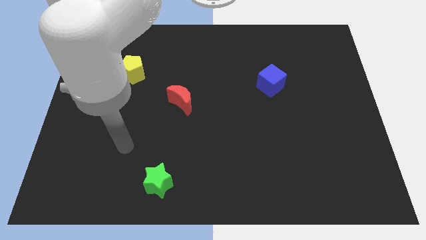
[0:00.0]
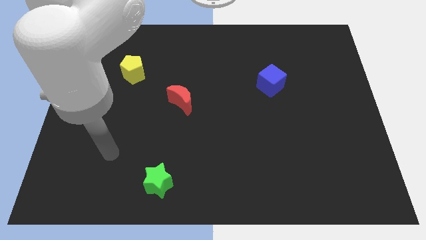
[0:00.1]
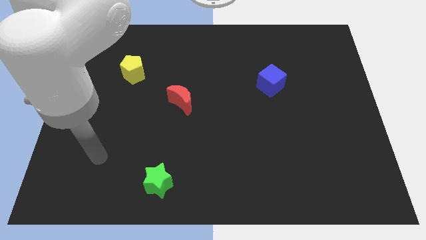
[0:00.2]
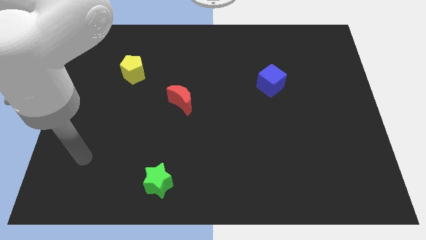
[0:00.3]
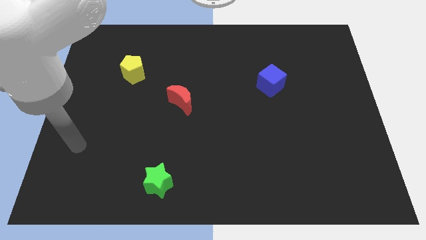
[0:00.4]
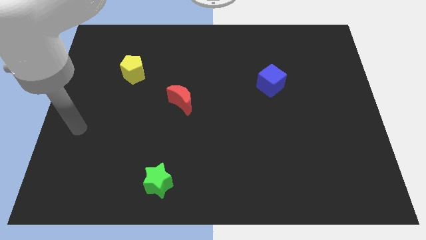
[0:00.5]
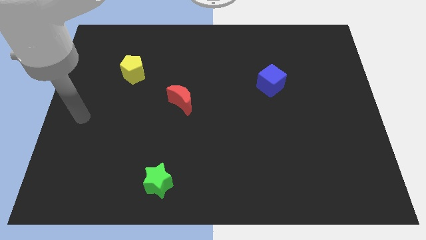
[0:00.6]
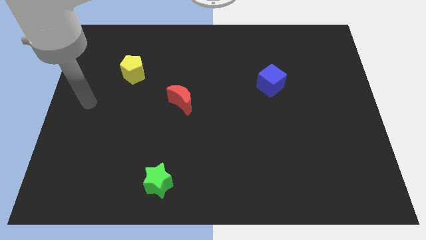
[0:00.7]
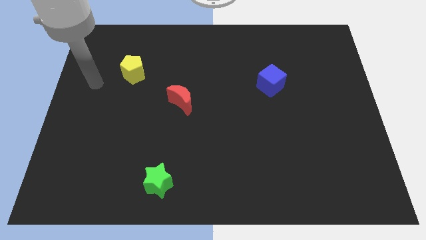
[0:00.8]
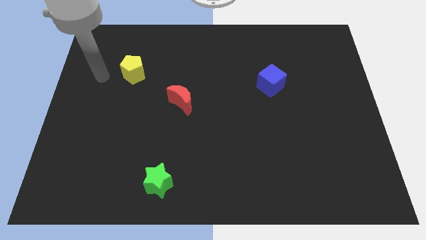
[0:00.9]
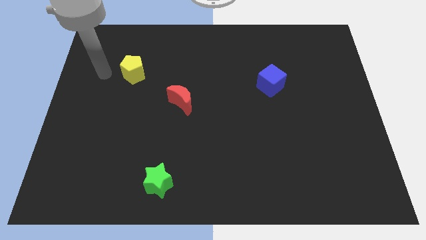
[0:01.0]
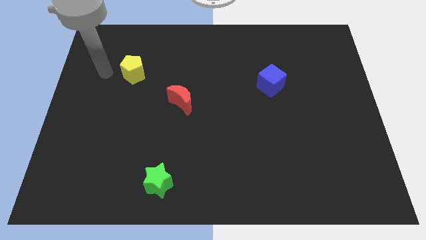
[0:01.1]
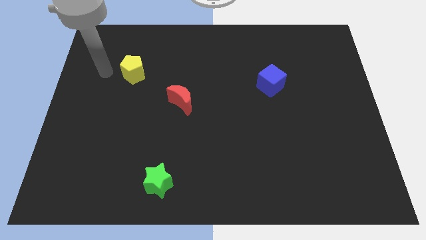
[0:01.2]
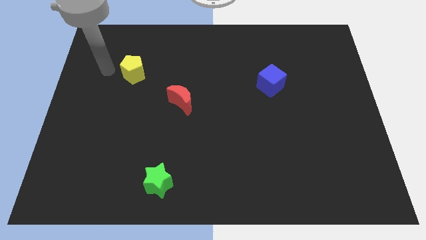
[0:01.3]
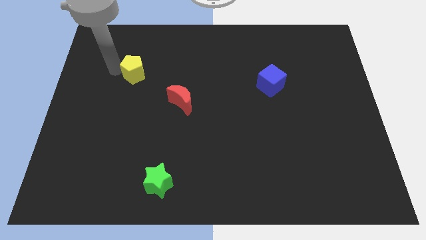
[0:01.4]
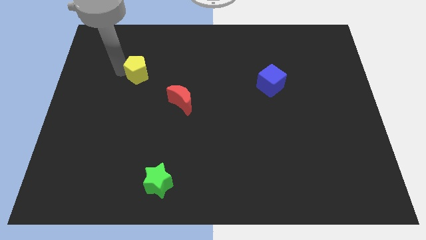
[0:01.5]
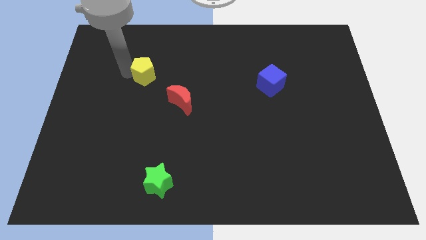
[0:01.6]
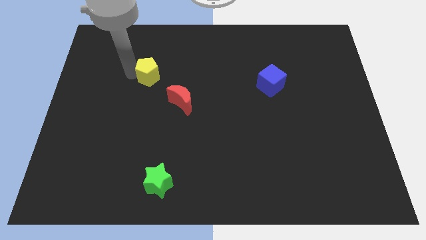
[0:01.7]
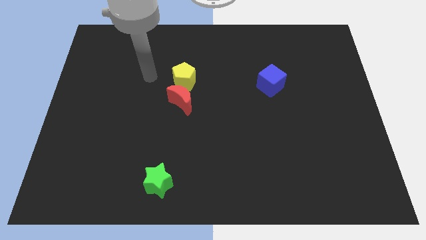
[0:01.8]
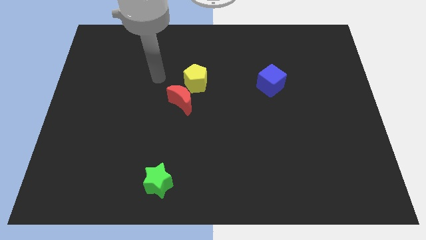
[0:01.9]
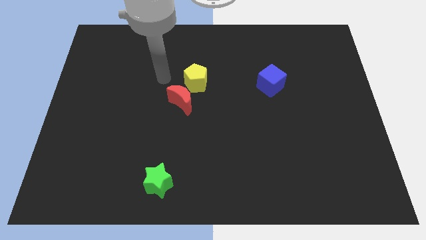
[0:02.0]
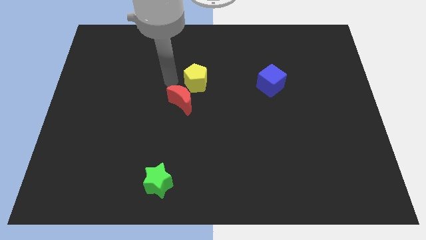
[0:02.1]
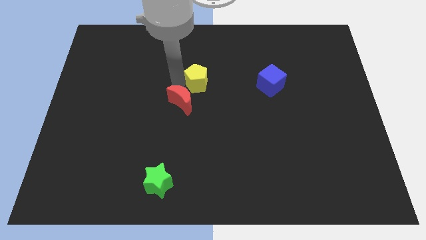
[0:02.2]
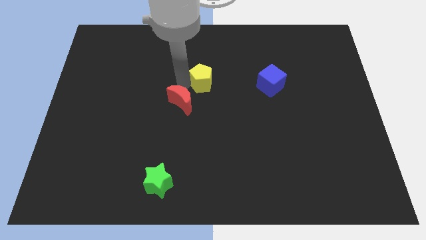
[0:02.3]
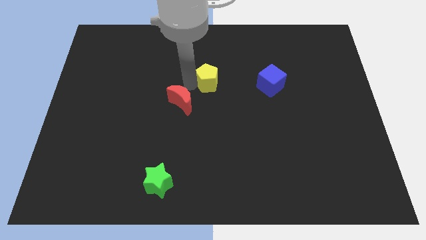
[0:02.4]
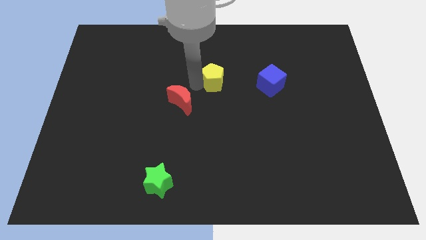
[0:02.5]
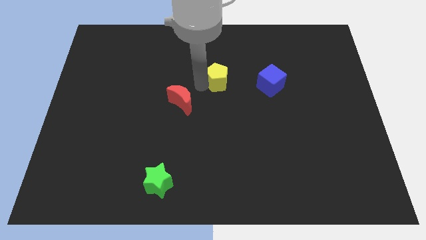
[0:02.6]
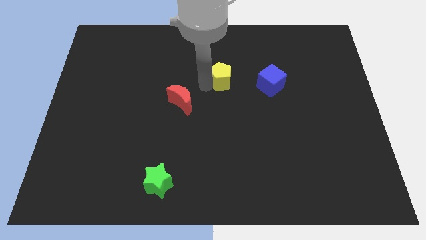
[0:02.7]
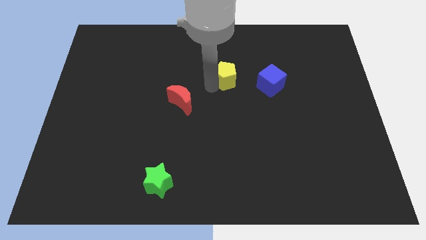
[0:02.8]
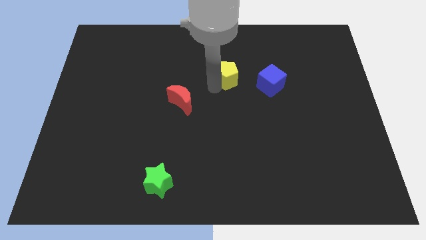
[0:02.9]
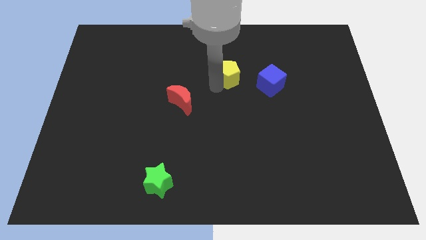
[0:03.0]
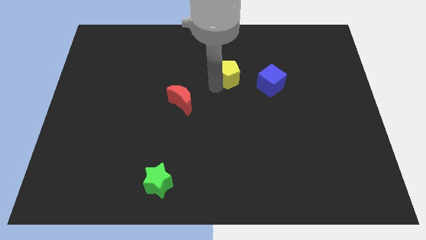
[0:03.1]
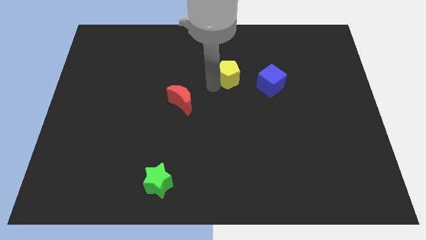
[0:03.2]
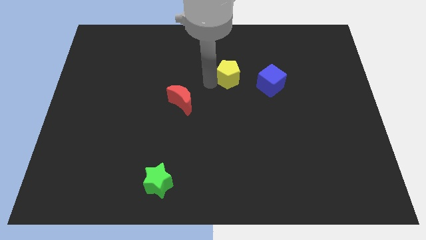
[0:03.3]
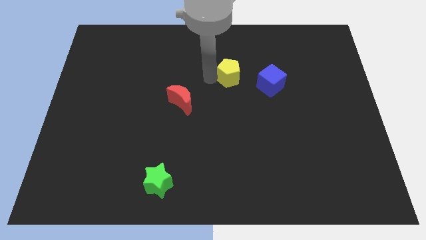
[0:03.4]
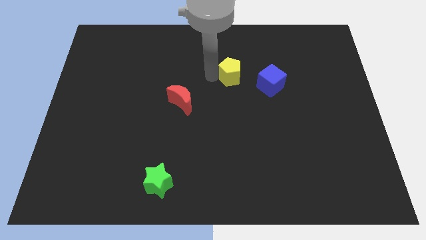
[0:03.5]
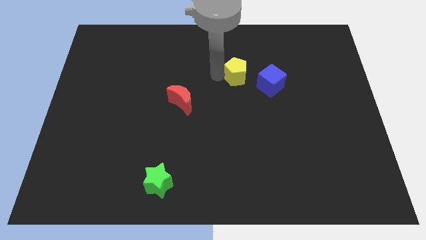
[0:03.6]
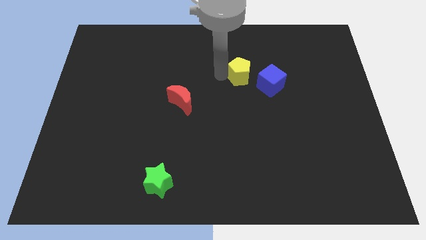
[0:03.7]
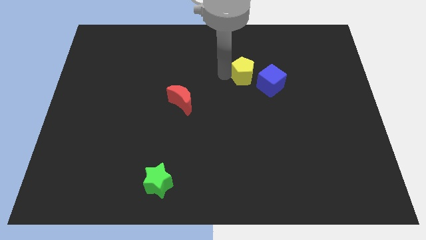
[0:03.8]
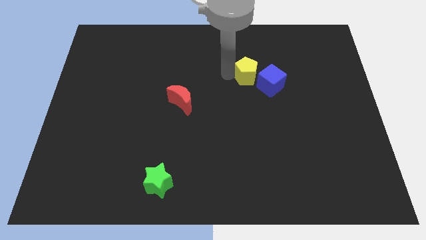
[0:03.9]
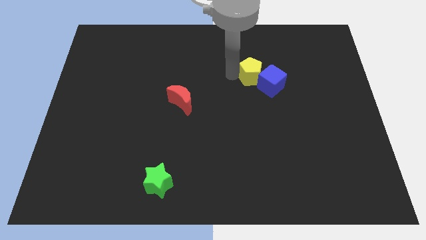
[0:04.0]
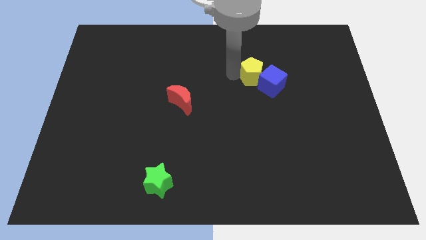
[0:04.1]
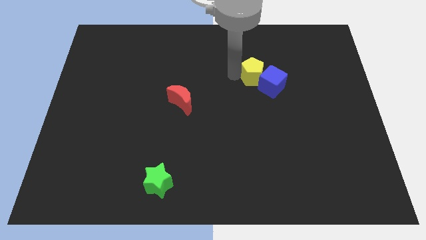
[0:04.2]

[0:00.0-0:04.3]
put the yellow block next to the cube

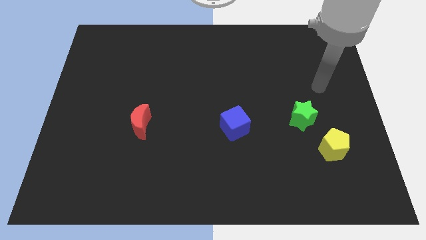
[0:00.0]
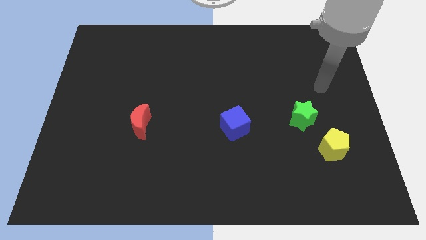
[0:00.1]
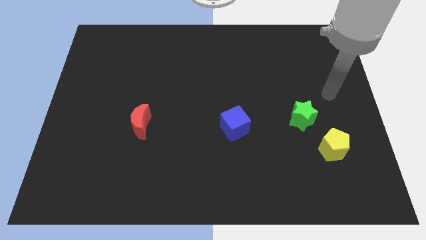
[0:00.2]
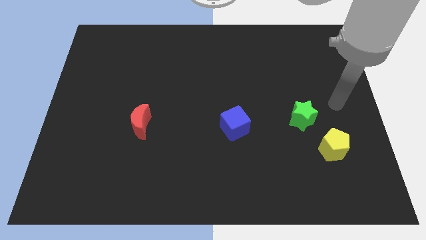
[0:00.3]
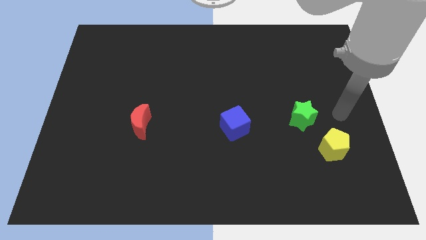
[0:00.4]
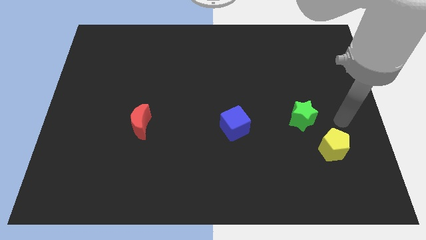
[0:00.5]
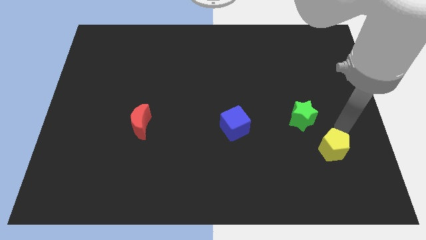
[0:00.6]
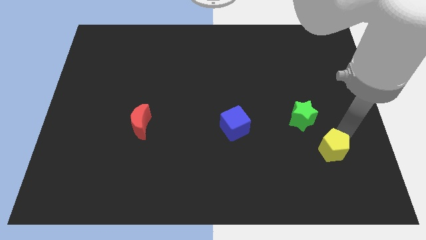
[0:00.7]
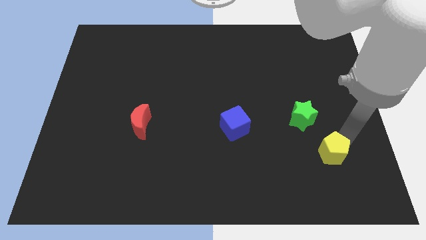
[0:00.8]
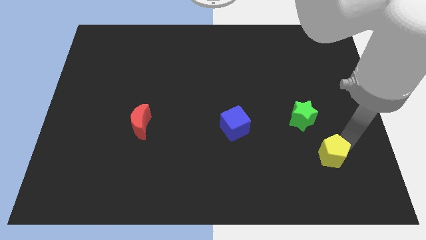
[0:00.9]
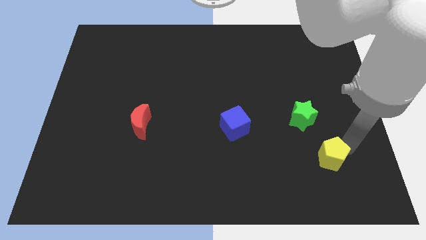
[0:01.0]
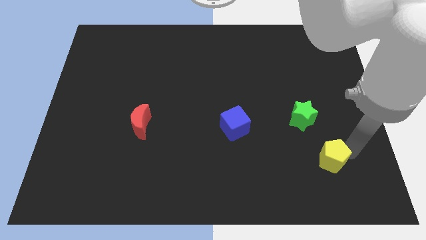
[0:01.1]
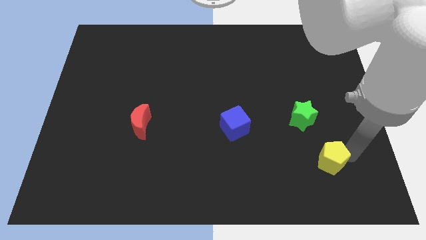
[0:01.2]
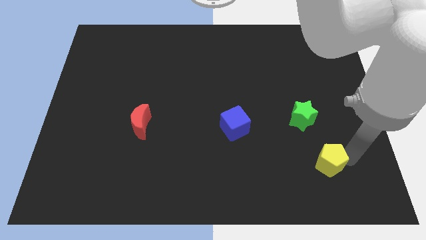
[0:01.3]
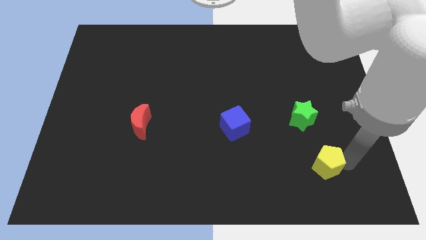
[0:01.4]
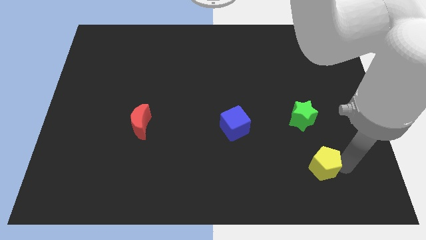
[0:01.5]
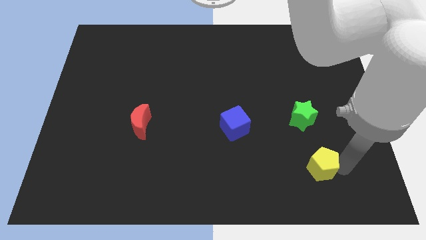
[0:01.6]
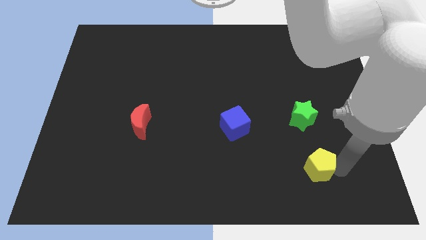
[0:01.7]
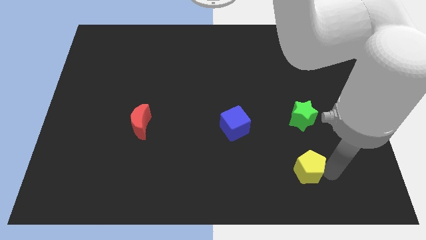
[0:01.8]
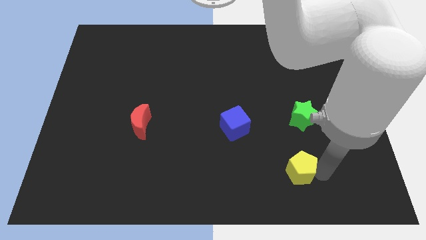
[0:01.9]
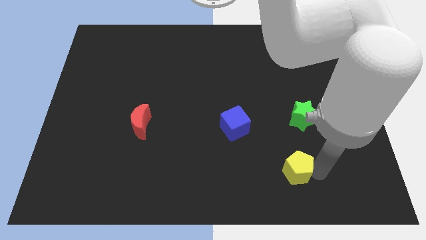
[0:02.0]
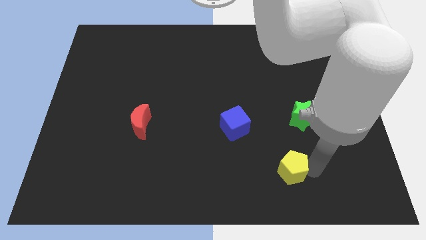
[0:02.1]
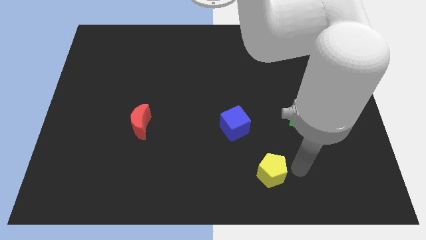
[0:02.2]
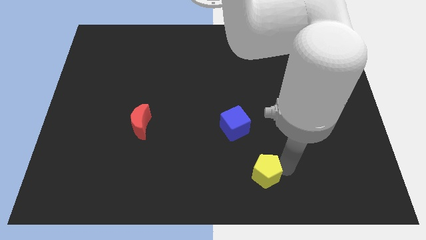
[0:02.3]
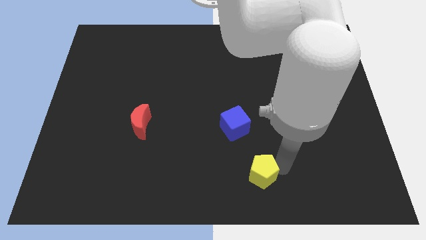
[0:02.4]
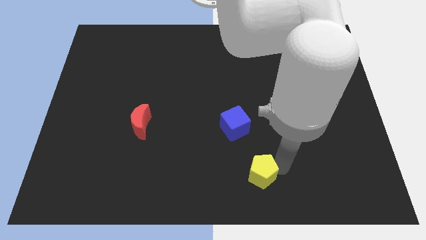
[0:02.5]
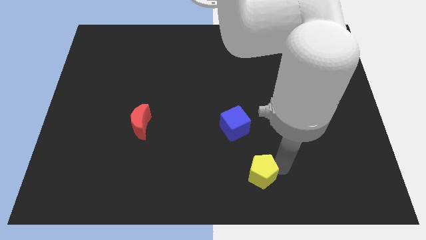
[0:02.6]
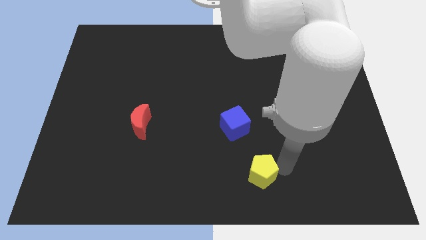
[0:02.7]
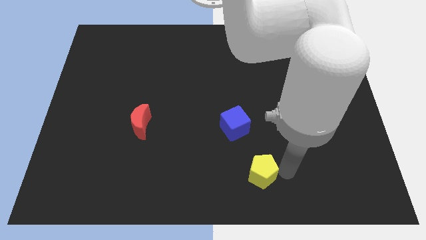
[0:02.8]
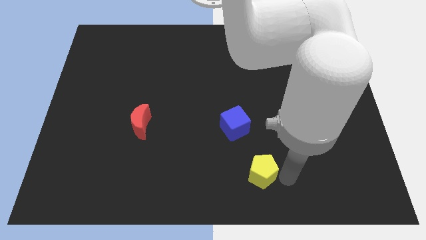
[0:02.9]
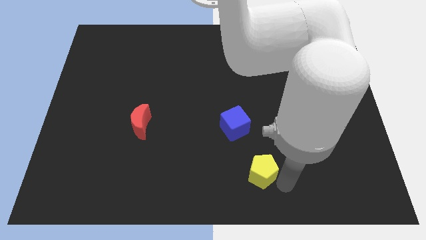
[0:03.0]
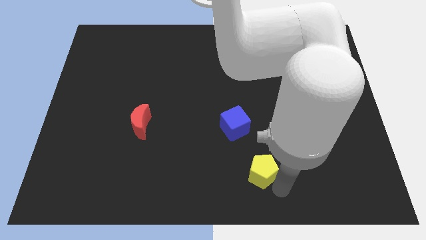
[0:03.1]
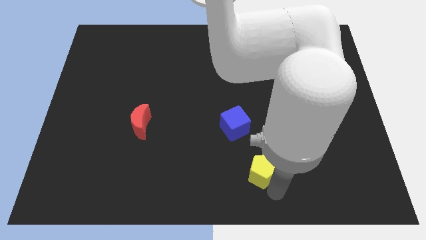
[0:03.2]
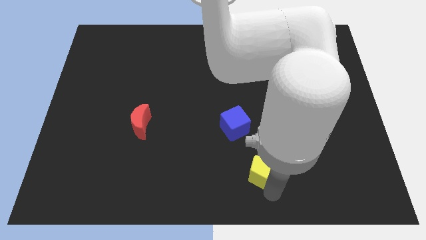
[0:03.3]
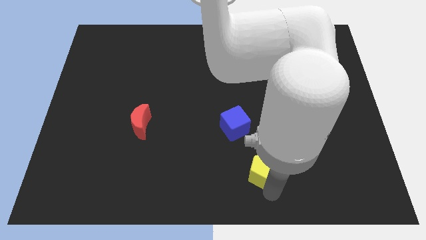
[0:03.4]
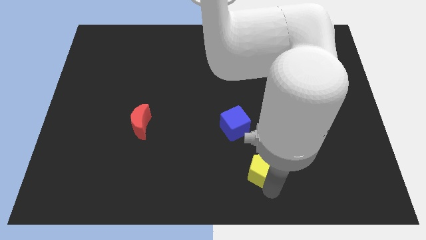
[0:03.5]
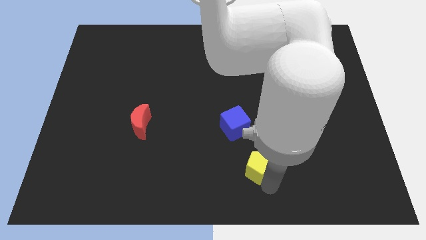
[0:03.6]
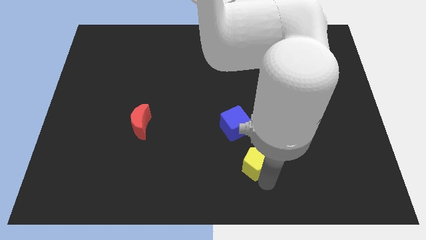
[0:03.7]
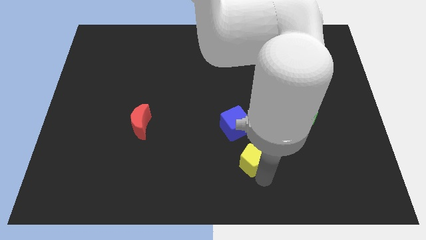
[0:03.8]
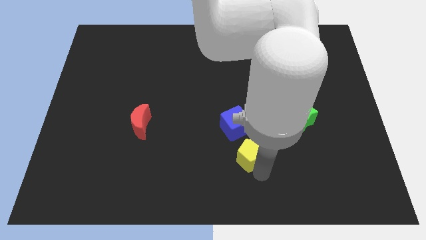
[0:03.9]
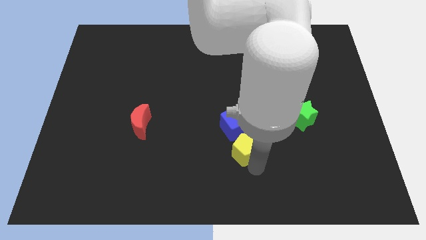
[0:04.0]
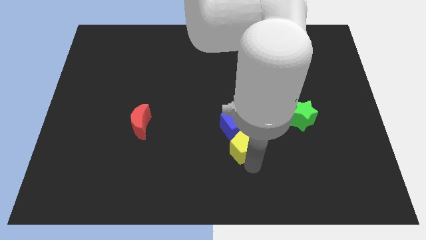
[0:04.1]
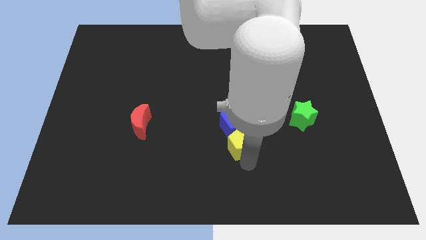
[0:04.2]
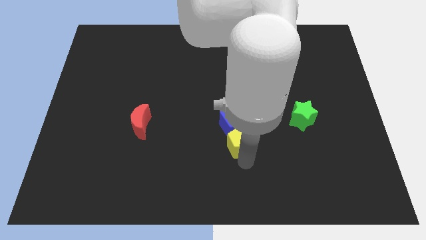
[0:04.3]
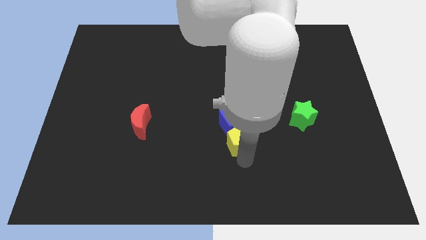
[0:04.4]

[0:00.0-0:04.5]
slide the pentagon next to the blue block
